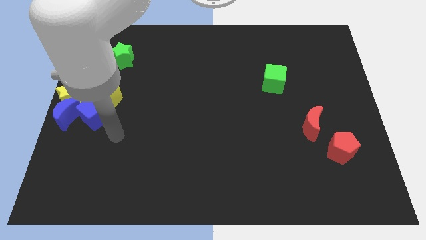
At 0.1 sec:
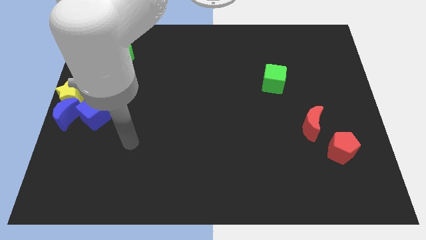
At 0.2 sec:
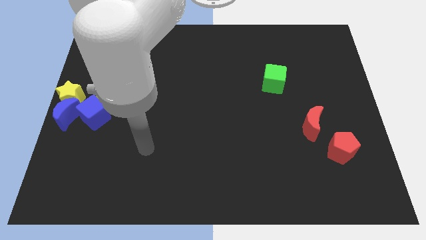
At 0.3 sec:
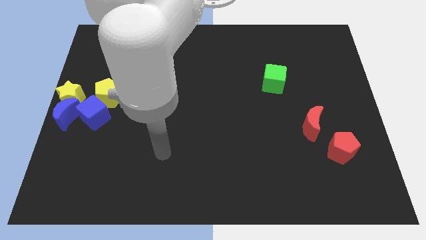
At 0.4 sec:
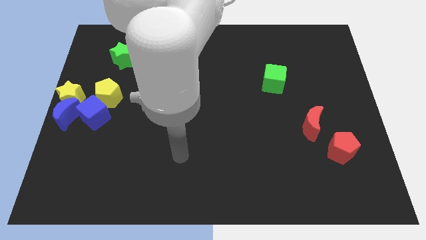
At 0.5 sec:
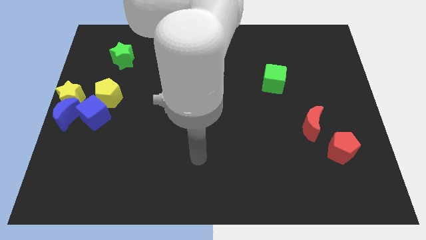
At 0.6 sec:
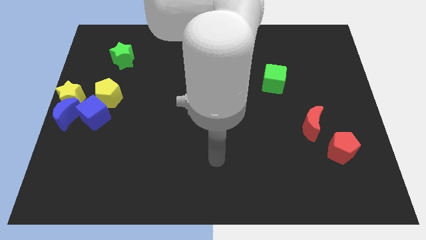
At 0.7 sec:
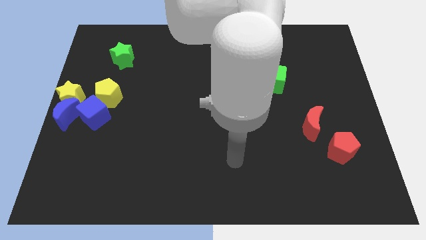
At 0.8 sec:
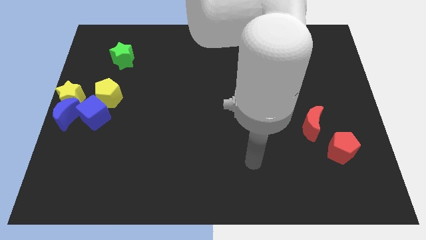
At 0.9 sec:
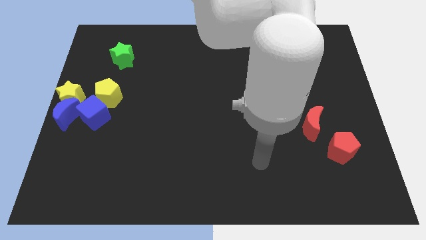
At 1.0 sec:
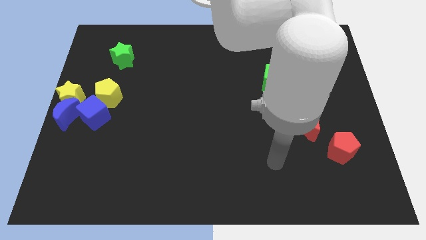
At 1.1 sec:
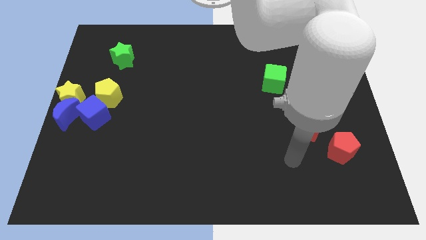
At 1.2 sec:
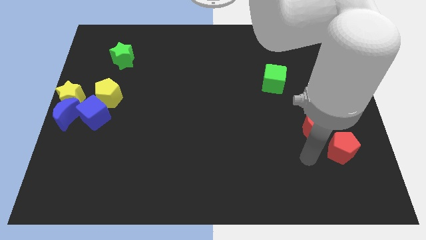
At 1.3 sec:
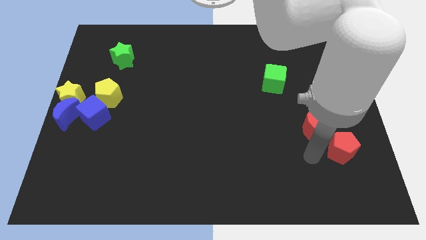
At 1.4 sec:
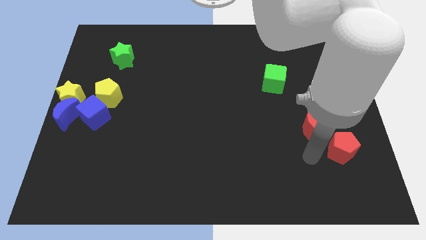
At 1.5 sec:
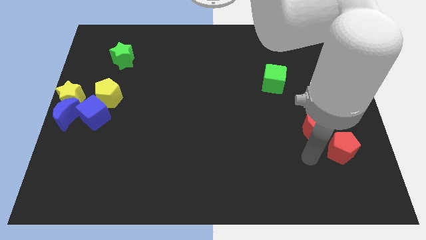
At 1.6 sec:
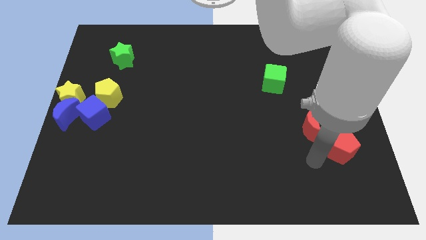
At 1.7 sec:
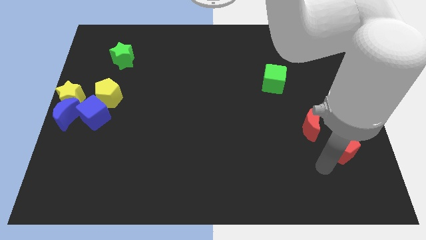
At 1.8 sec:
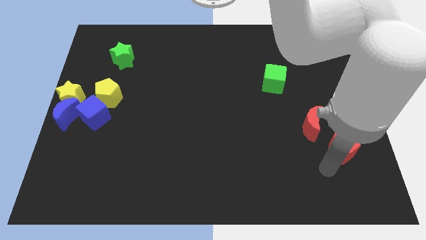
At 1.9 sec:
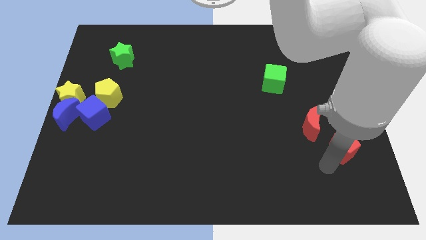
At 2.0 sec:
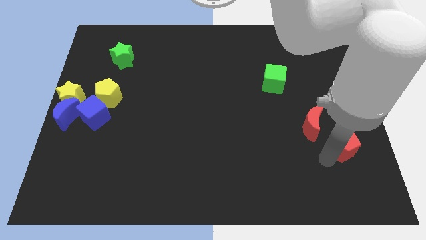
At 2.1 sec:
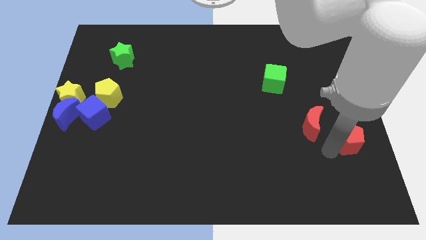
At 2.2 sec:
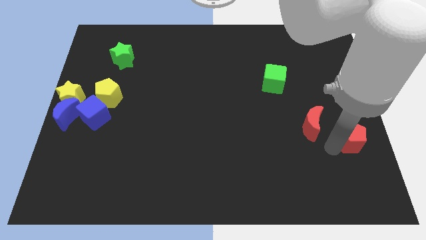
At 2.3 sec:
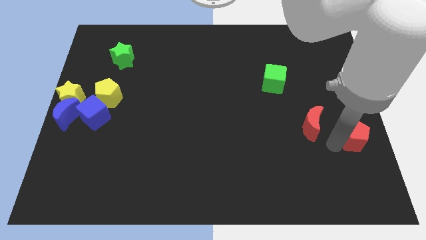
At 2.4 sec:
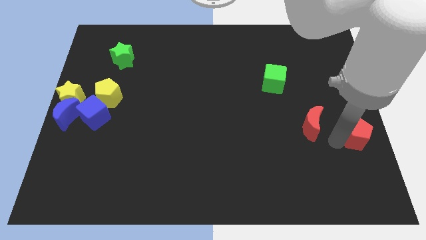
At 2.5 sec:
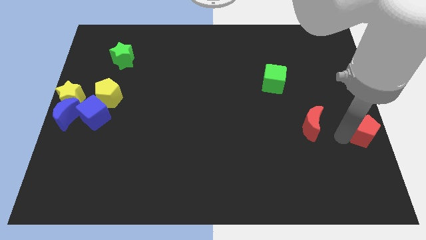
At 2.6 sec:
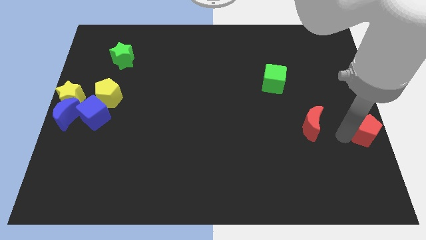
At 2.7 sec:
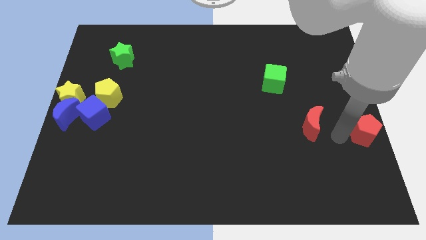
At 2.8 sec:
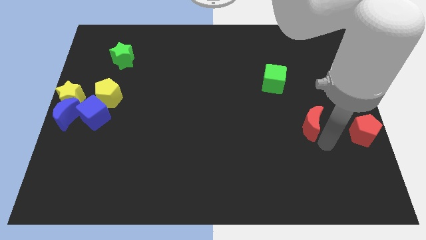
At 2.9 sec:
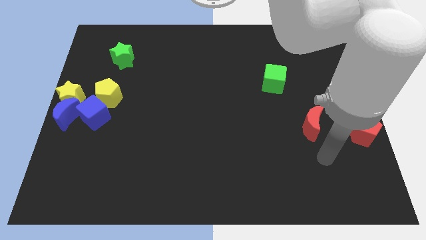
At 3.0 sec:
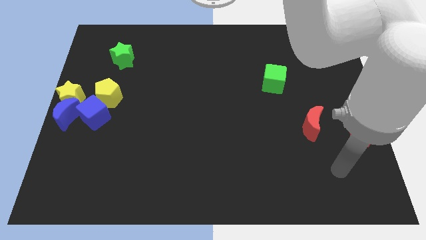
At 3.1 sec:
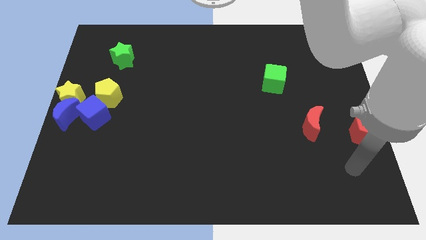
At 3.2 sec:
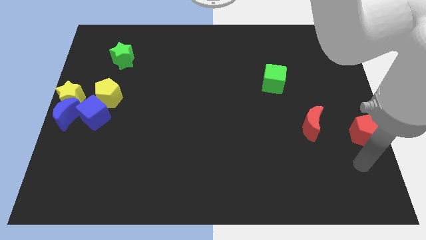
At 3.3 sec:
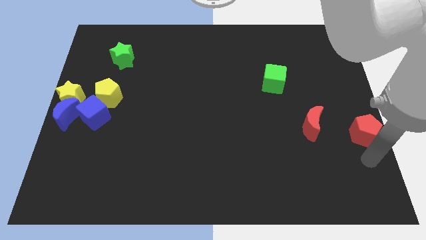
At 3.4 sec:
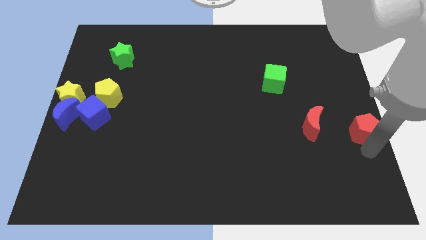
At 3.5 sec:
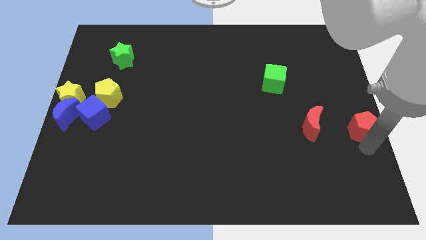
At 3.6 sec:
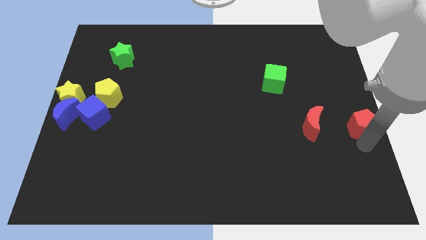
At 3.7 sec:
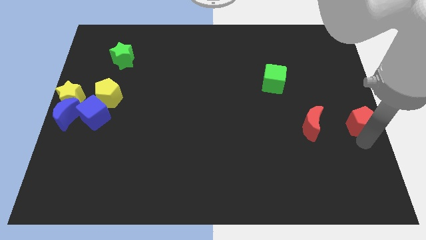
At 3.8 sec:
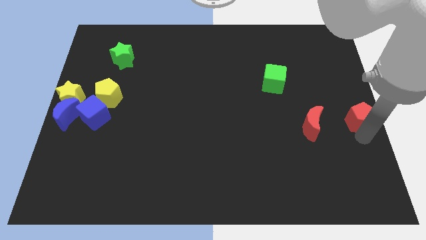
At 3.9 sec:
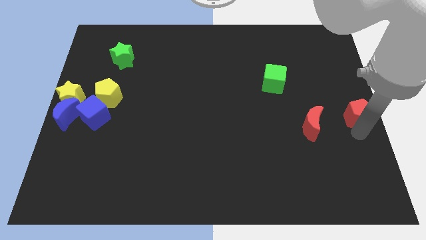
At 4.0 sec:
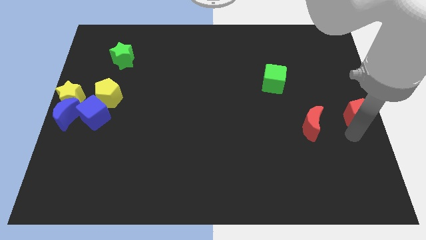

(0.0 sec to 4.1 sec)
place the red pentagon right to the red moon

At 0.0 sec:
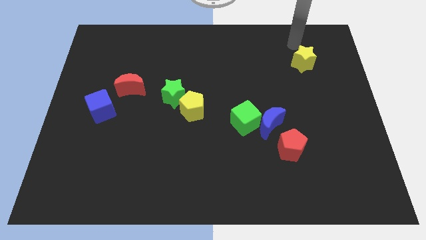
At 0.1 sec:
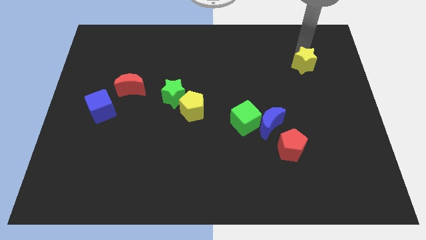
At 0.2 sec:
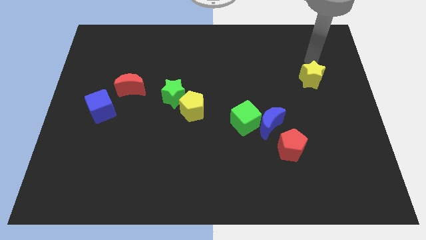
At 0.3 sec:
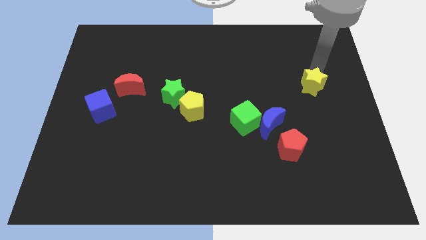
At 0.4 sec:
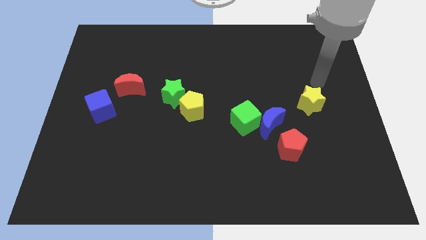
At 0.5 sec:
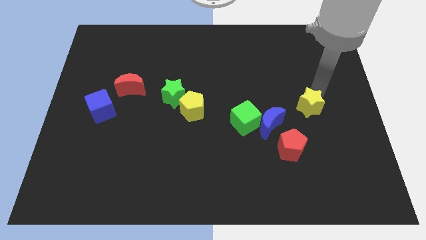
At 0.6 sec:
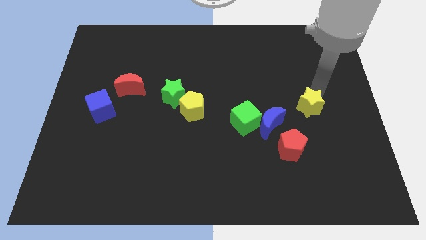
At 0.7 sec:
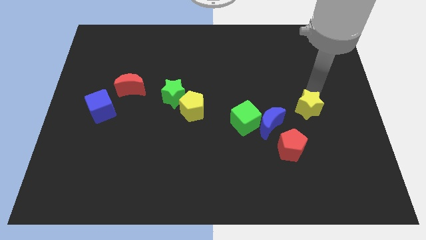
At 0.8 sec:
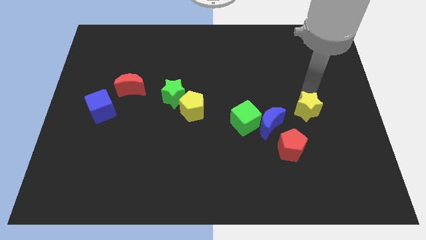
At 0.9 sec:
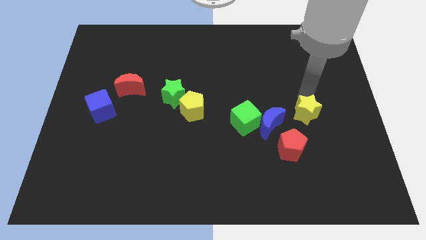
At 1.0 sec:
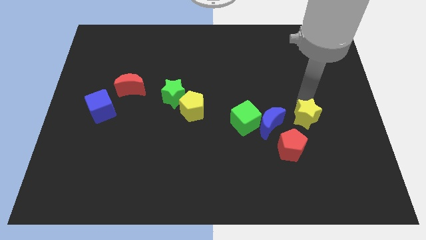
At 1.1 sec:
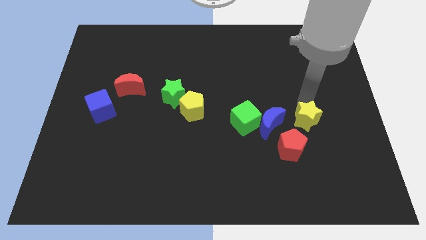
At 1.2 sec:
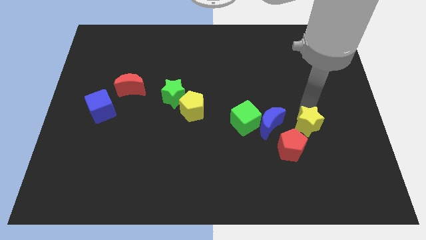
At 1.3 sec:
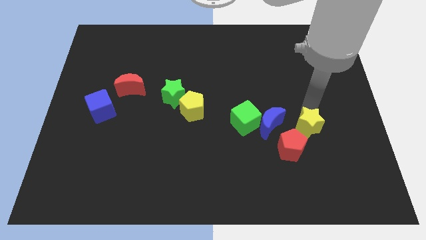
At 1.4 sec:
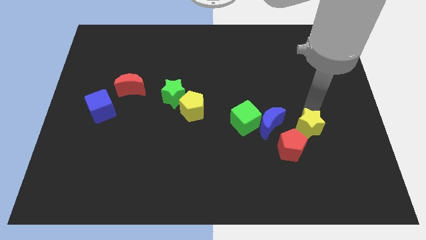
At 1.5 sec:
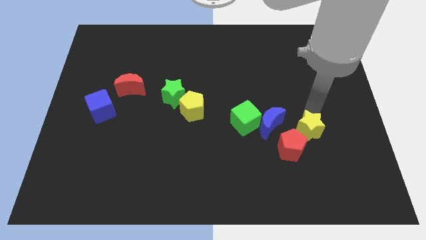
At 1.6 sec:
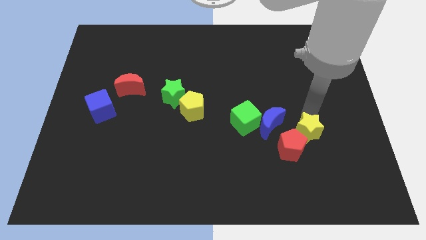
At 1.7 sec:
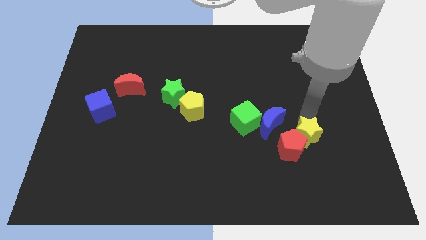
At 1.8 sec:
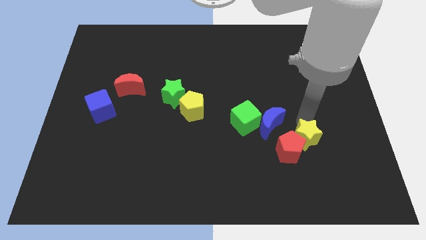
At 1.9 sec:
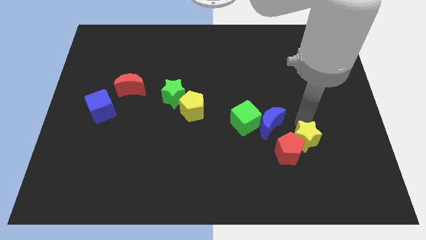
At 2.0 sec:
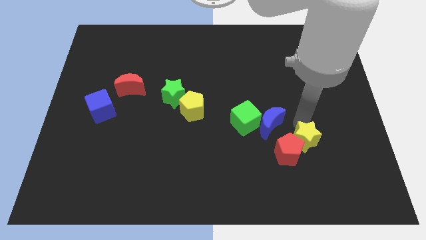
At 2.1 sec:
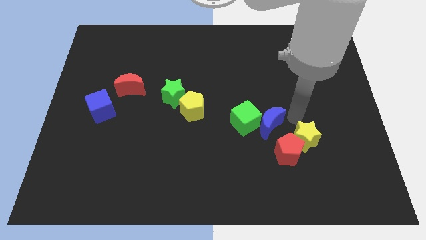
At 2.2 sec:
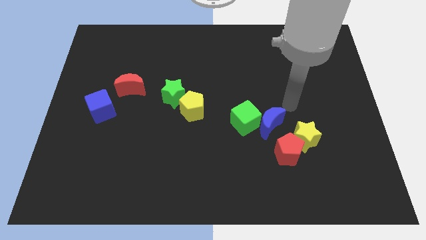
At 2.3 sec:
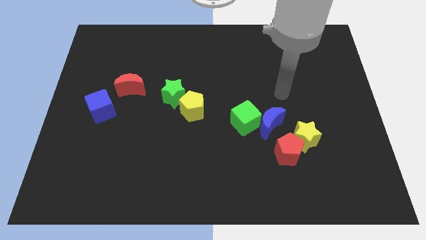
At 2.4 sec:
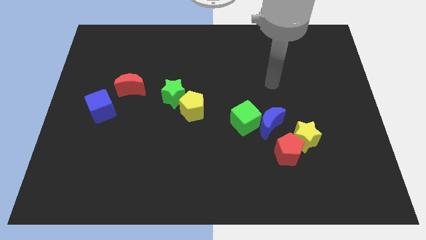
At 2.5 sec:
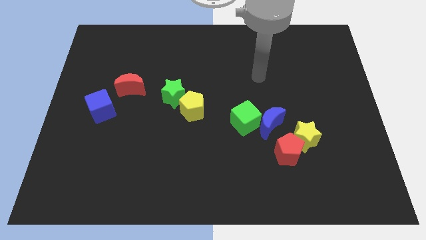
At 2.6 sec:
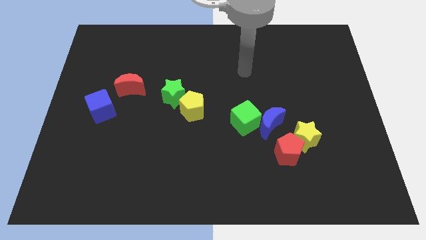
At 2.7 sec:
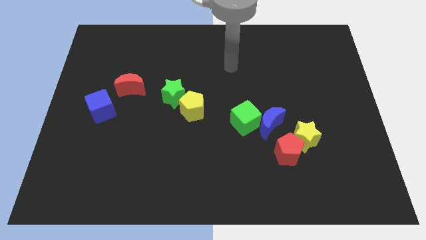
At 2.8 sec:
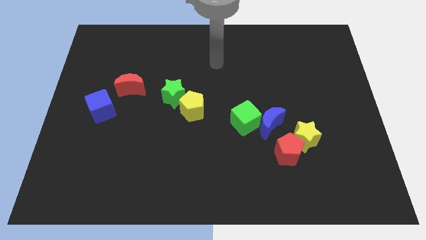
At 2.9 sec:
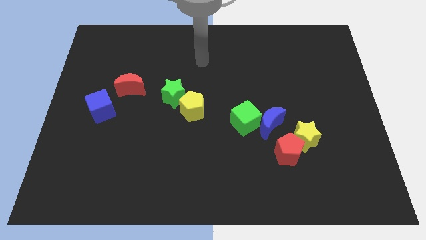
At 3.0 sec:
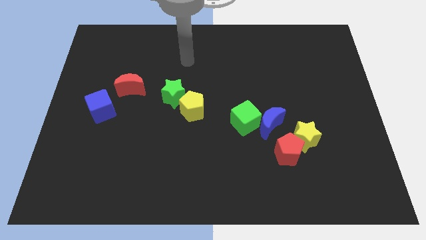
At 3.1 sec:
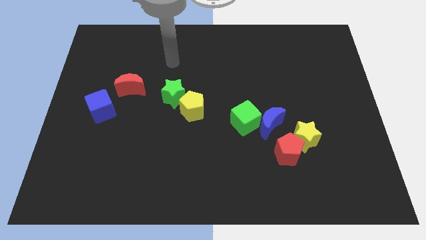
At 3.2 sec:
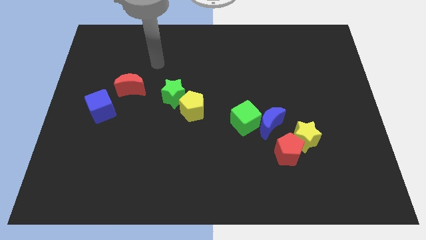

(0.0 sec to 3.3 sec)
push the yellow star into red pentagon

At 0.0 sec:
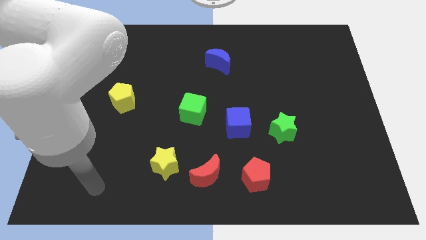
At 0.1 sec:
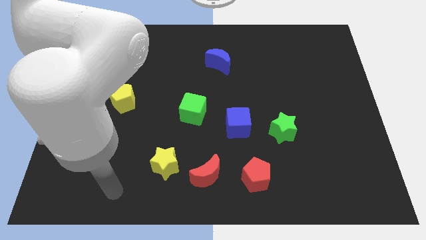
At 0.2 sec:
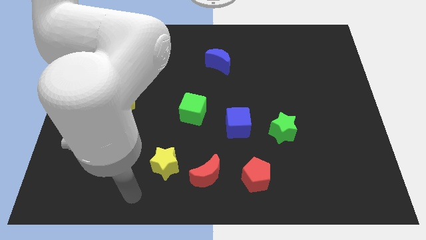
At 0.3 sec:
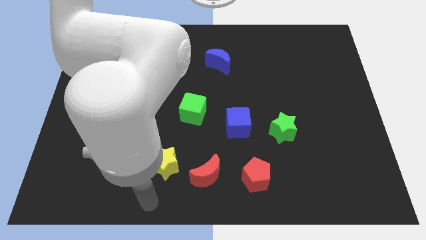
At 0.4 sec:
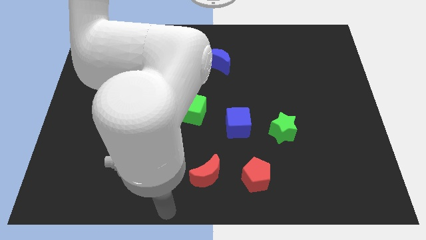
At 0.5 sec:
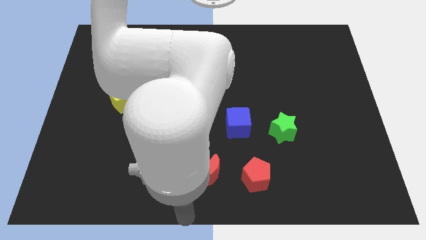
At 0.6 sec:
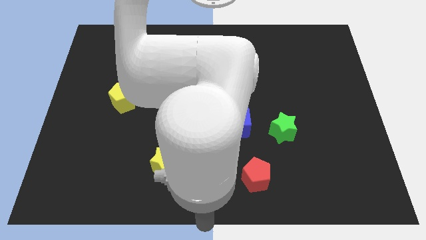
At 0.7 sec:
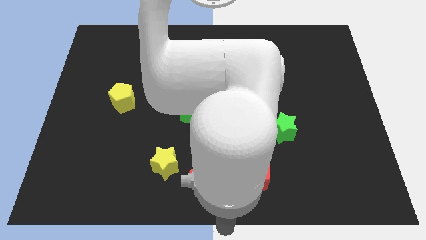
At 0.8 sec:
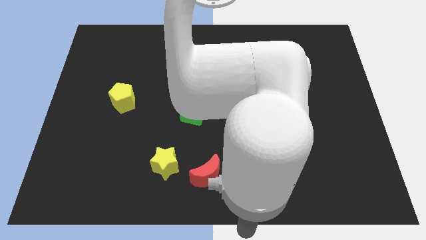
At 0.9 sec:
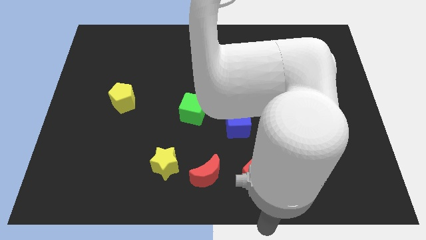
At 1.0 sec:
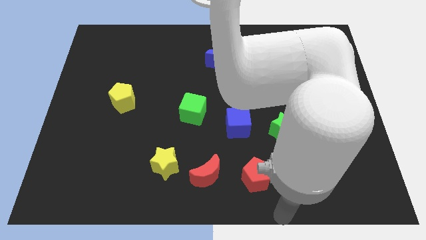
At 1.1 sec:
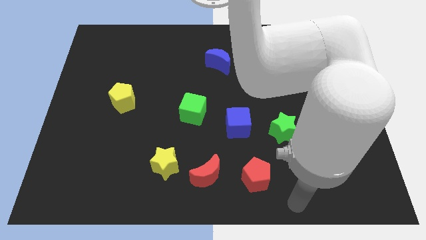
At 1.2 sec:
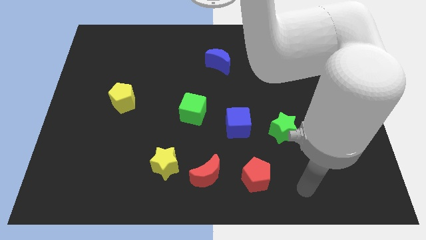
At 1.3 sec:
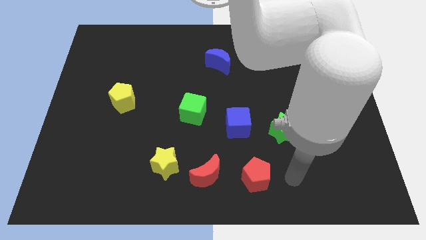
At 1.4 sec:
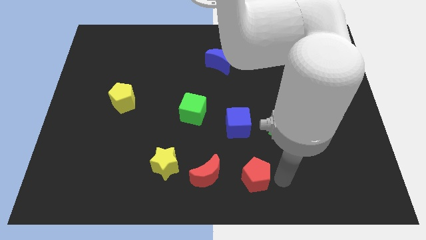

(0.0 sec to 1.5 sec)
point your hand at the right side of the red pentagon
